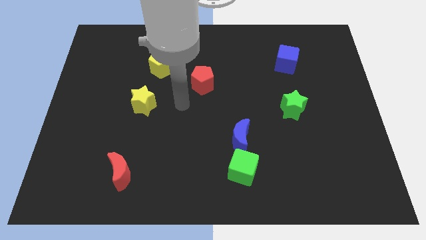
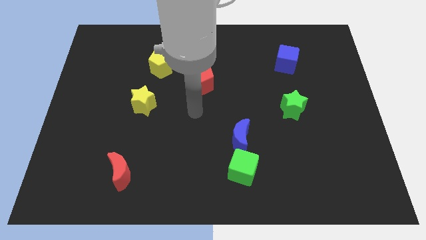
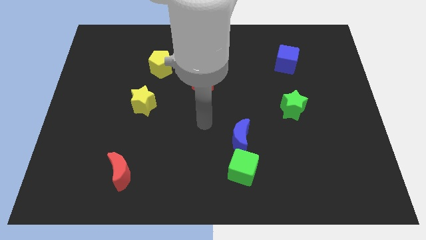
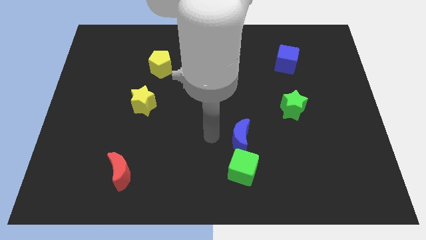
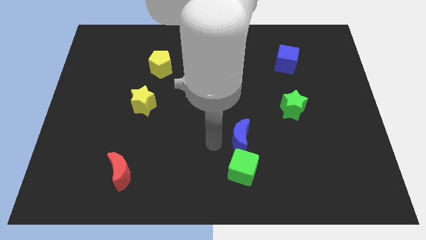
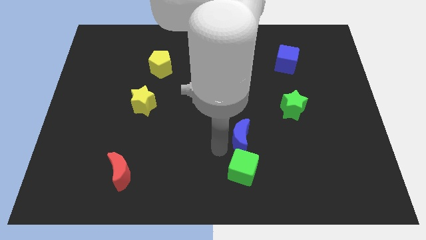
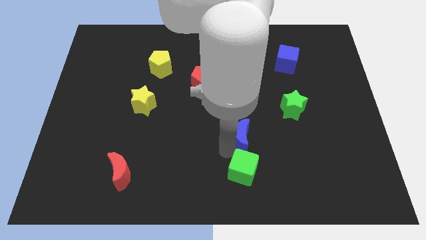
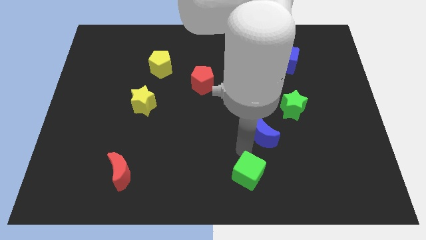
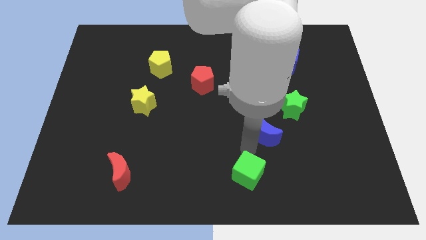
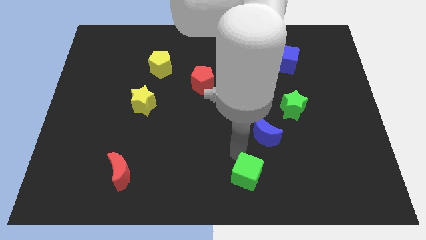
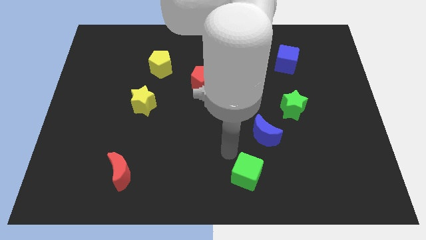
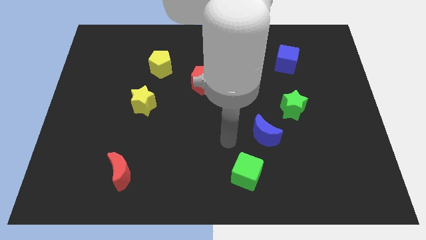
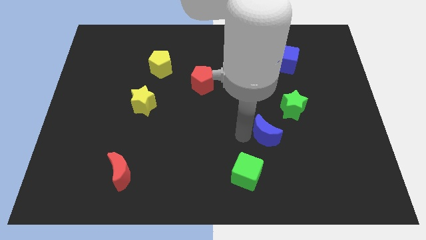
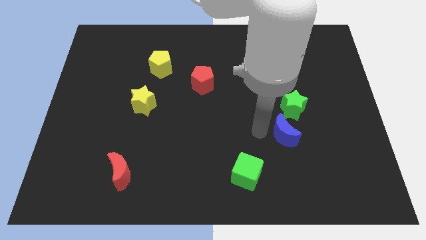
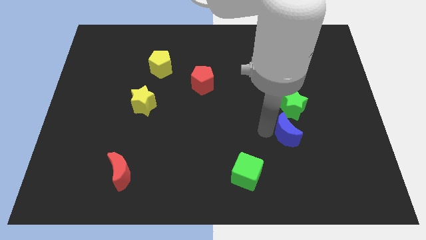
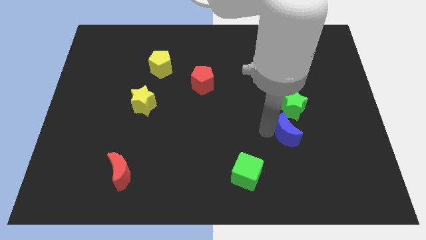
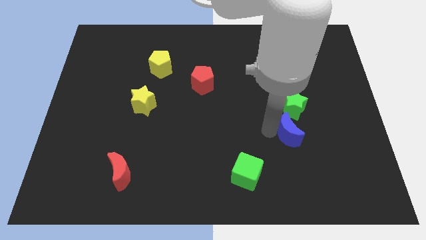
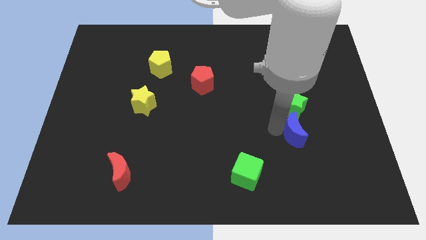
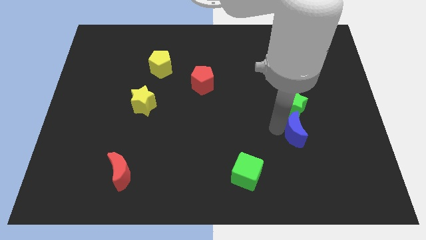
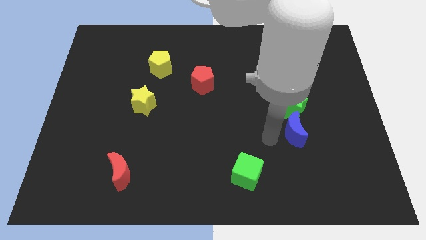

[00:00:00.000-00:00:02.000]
move blue moon below the green star

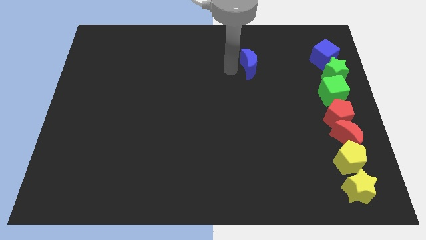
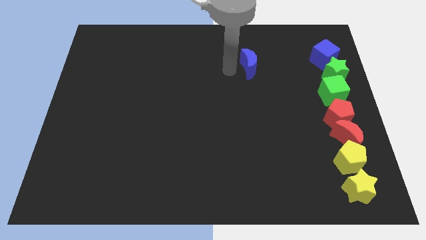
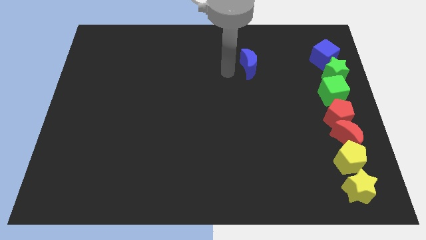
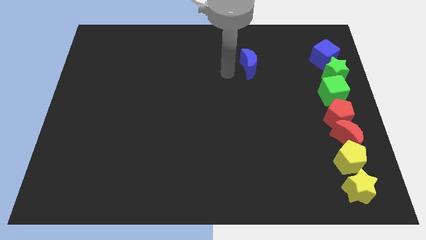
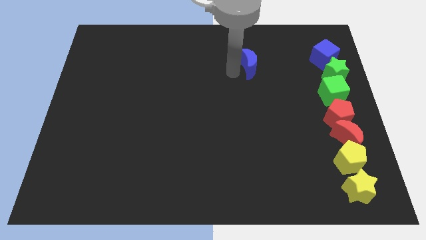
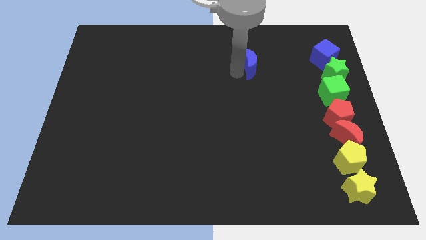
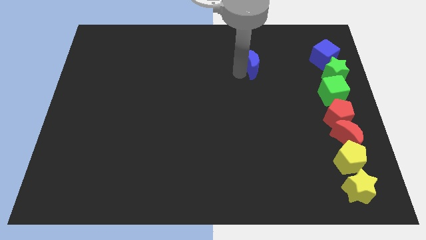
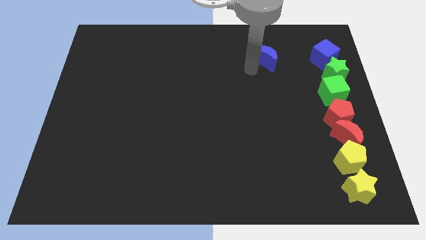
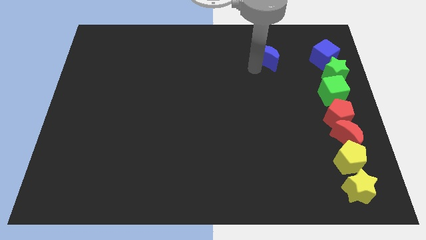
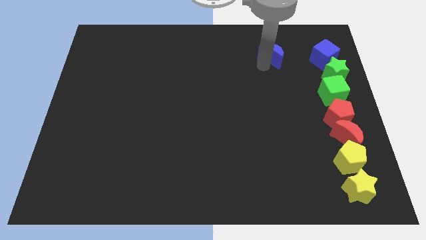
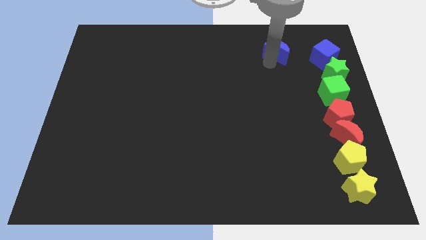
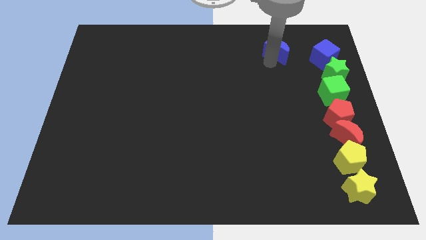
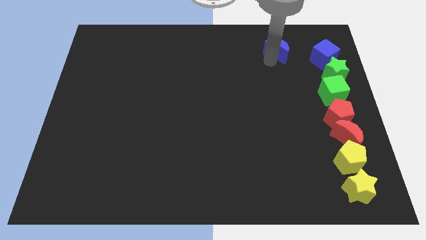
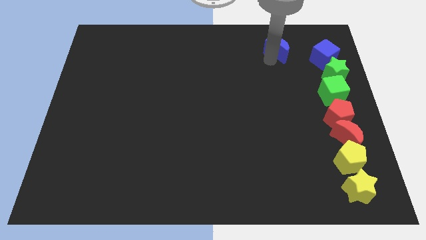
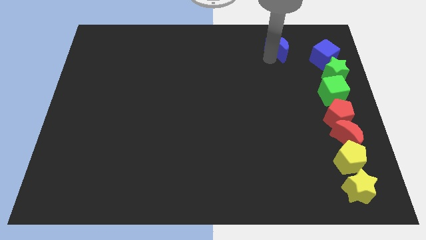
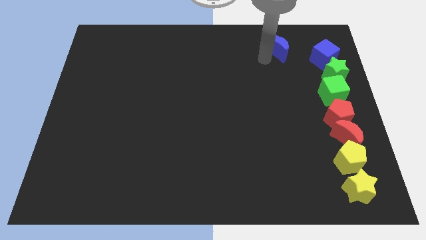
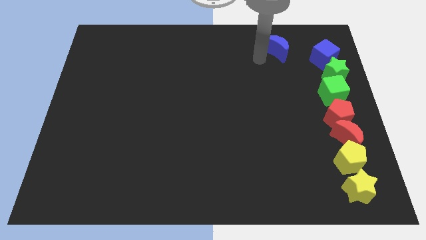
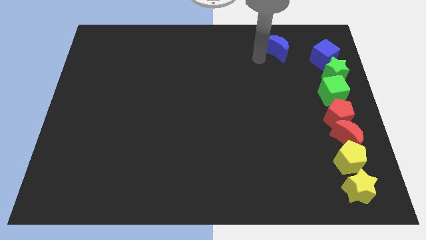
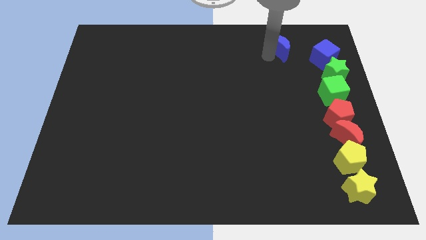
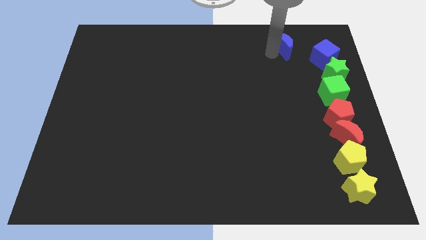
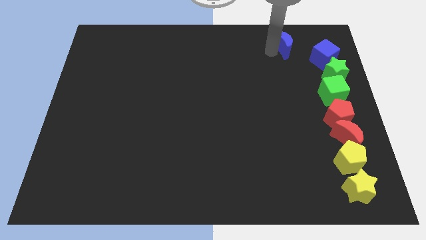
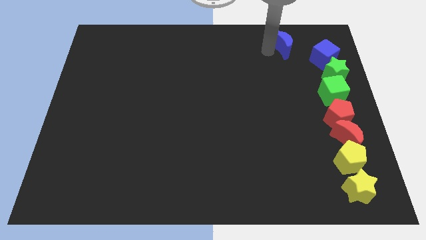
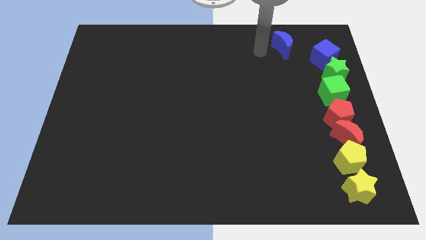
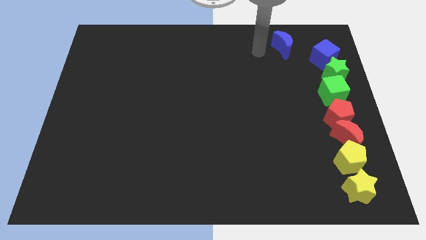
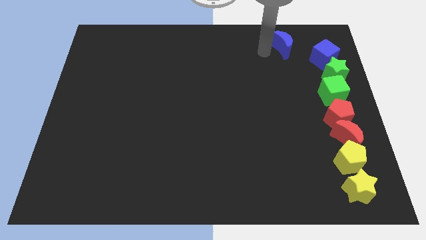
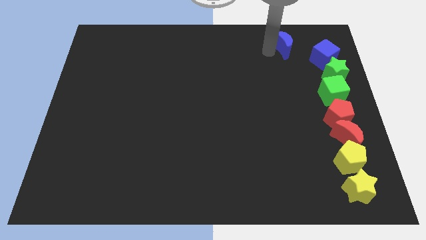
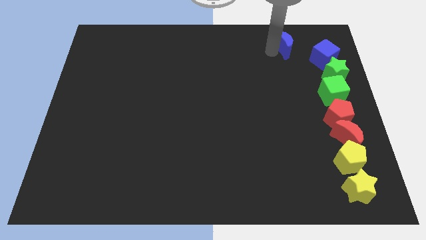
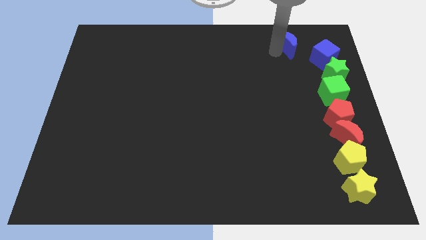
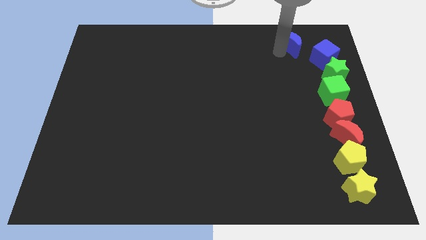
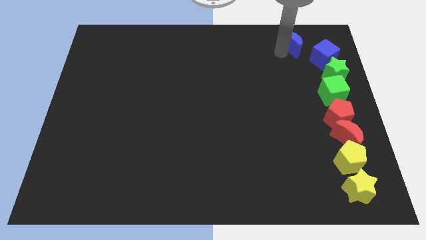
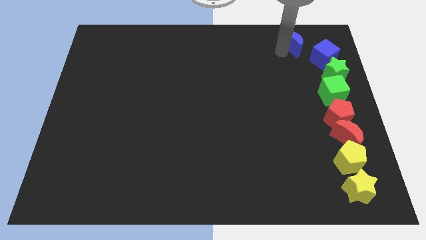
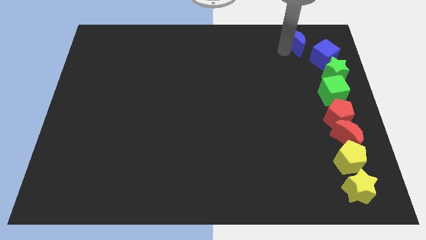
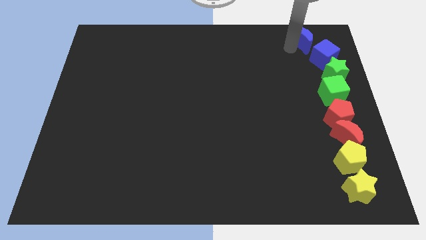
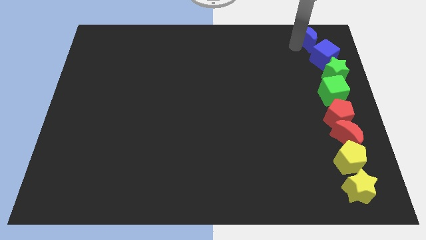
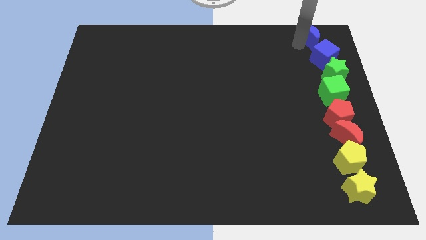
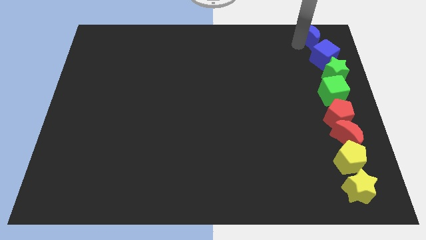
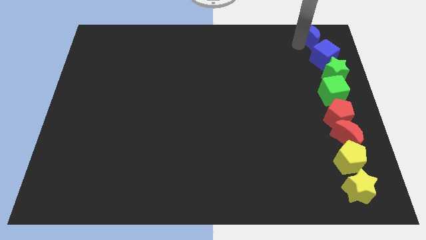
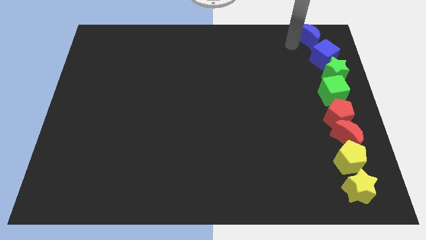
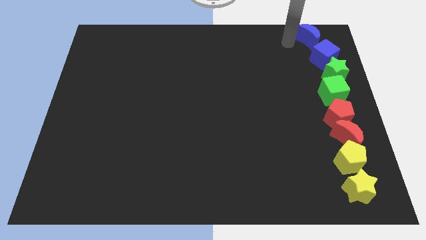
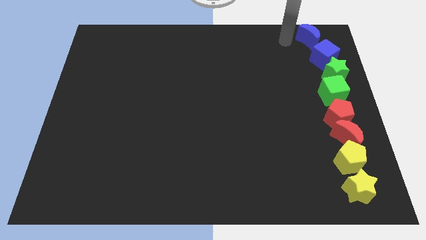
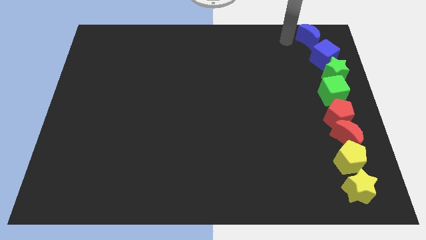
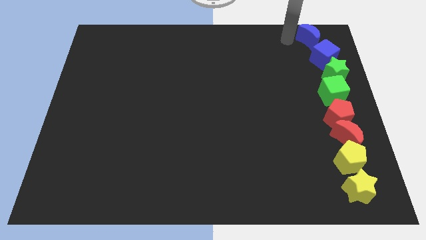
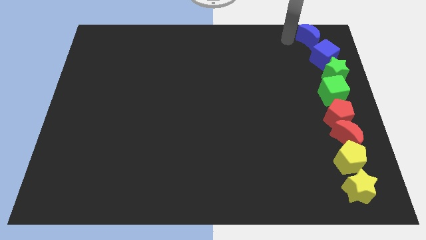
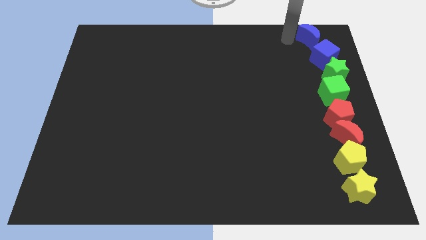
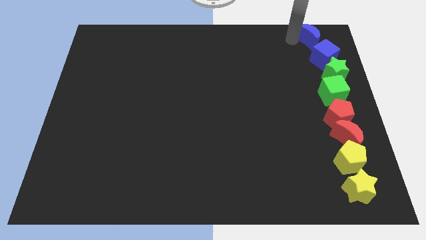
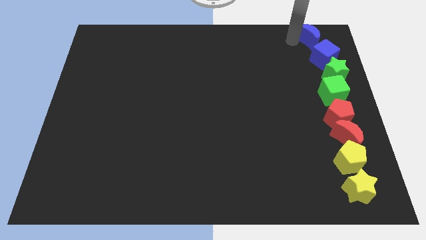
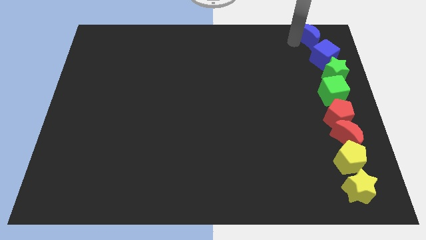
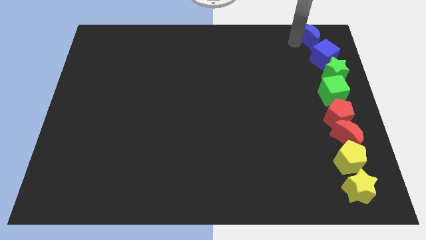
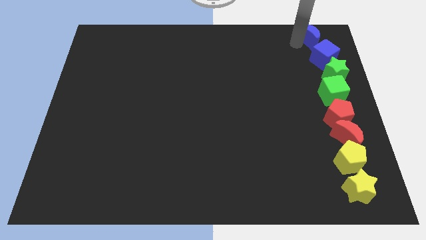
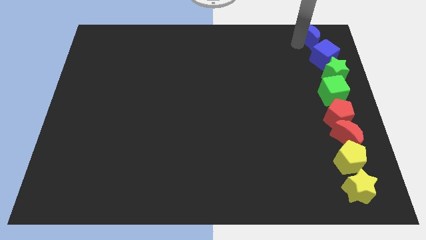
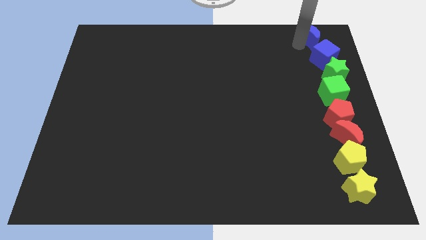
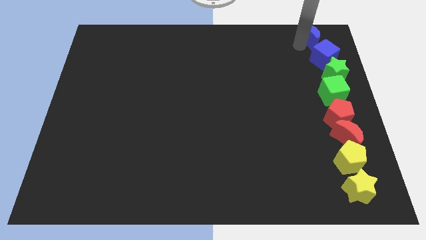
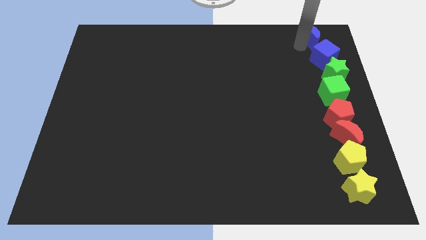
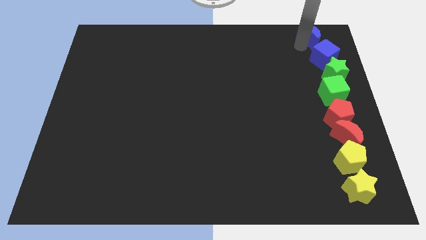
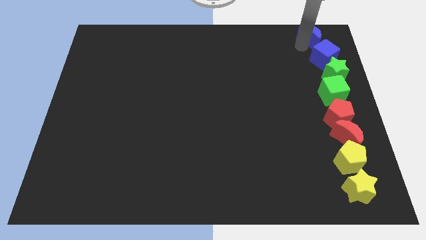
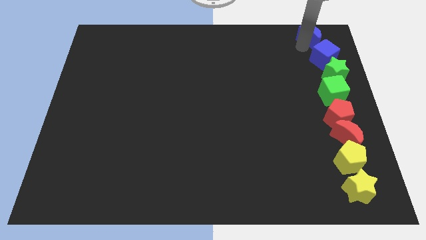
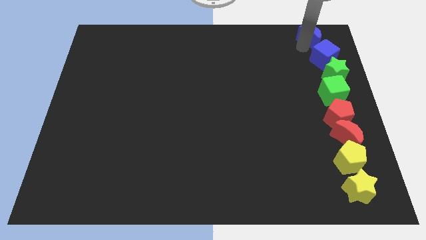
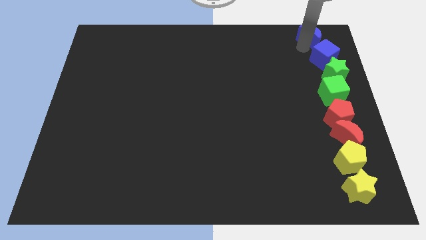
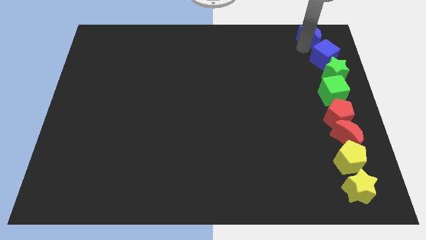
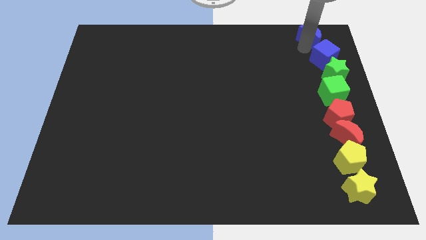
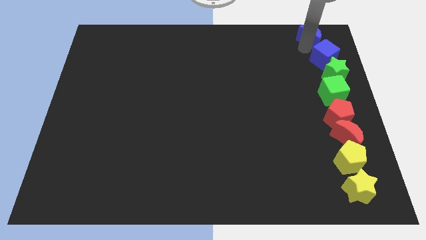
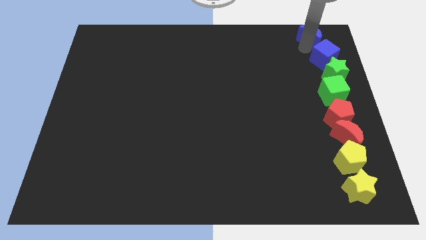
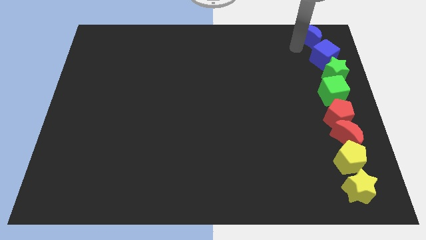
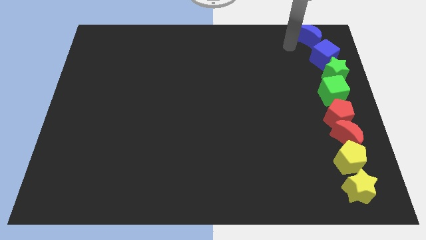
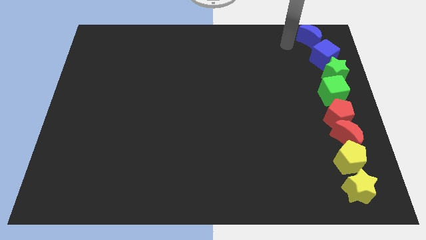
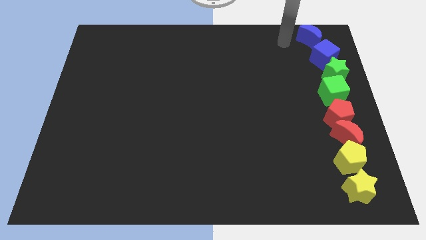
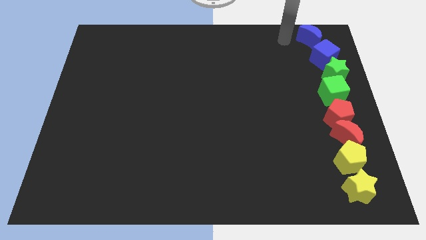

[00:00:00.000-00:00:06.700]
move the blue crescent above to the blue cube

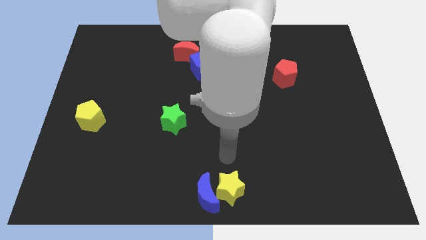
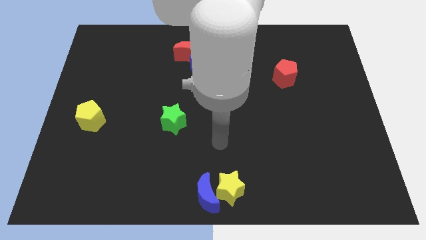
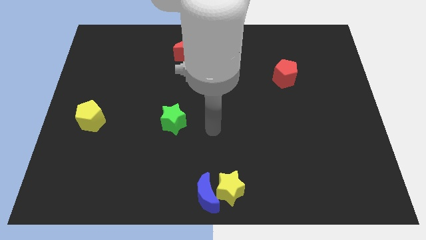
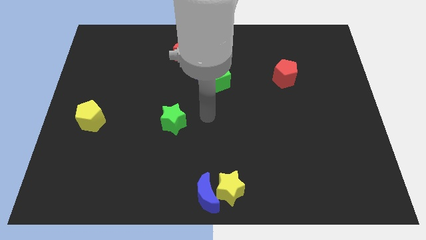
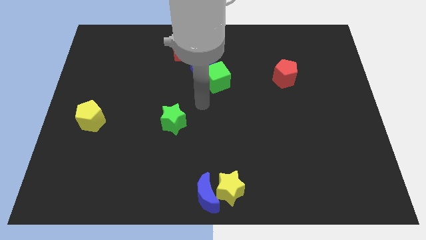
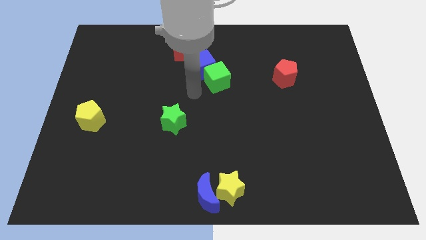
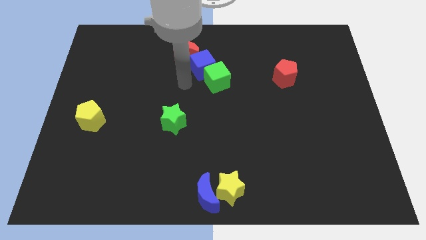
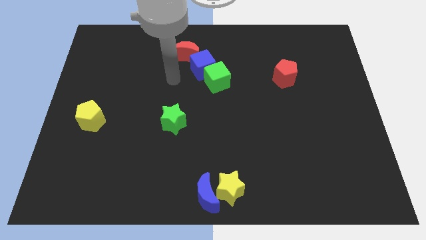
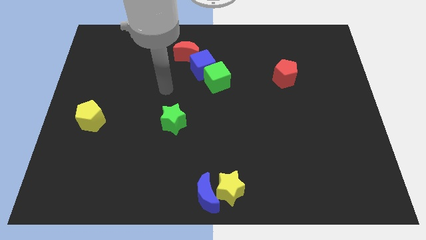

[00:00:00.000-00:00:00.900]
move your arm away from yellow star
